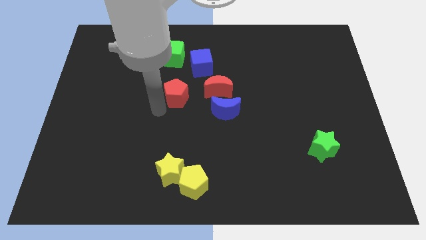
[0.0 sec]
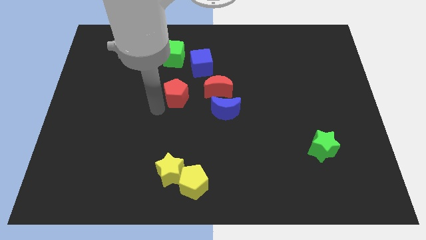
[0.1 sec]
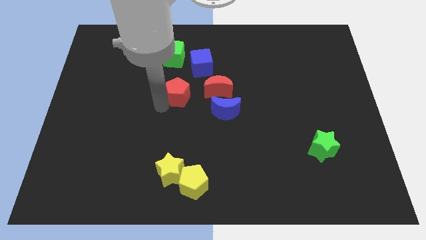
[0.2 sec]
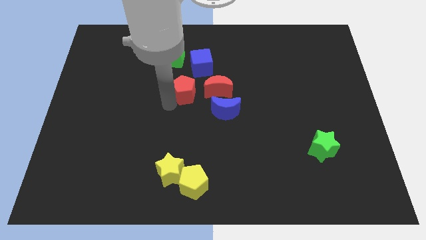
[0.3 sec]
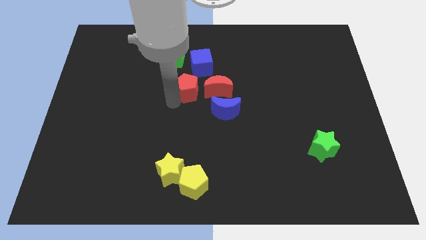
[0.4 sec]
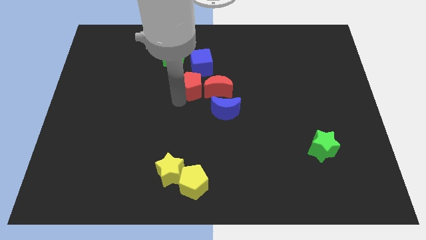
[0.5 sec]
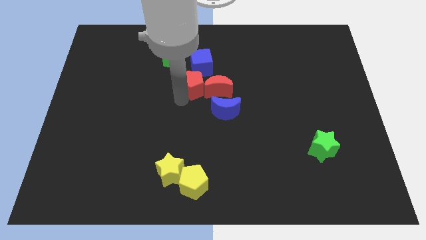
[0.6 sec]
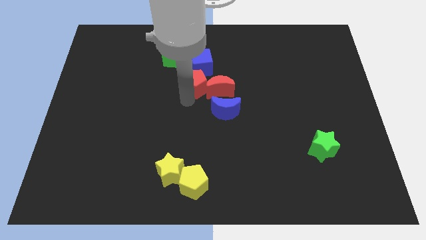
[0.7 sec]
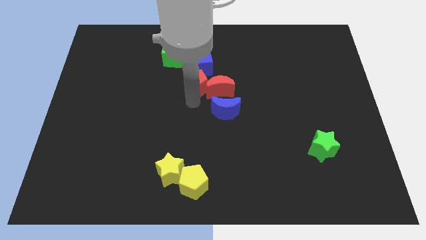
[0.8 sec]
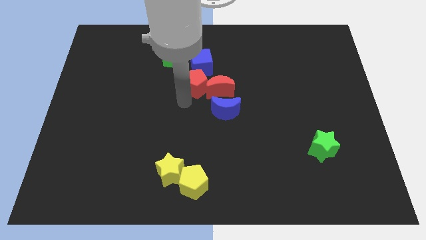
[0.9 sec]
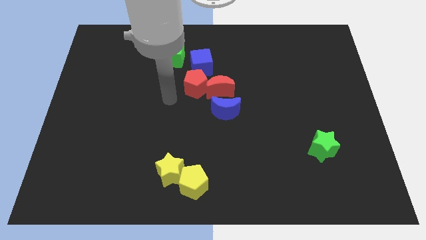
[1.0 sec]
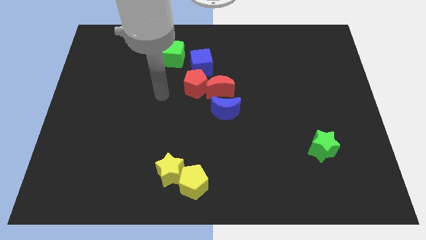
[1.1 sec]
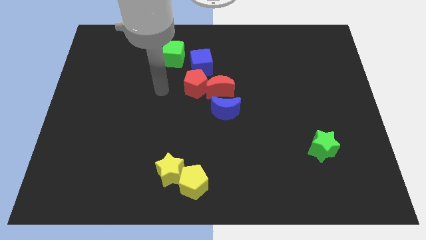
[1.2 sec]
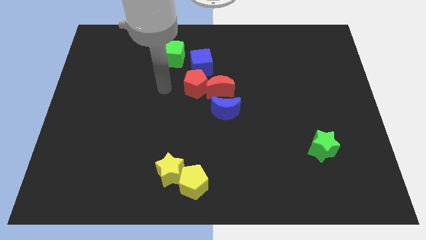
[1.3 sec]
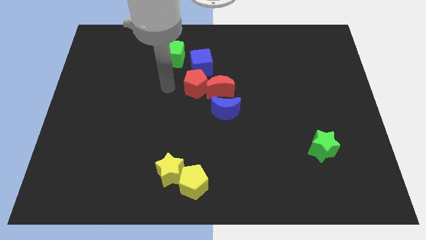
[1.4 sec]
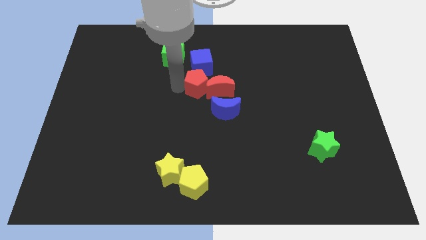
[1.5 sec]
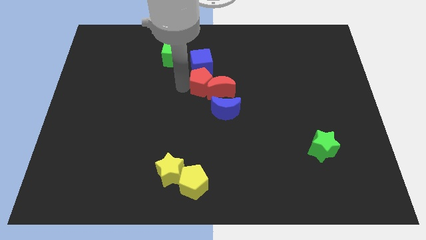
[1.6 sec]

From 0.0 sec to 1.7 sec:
place the red pentagon to the left of the red crescent

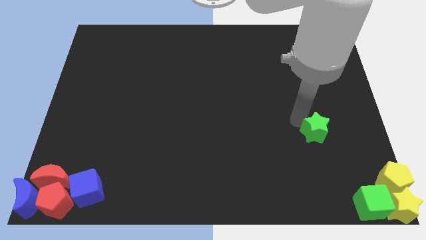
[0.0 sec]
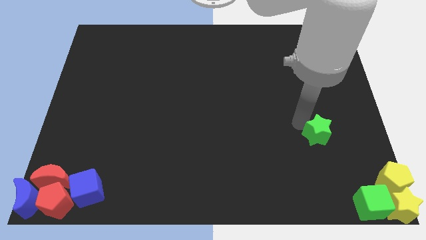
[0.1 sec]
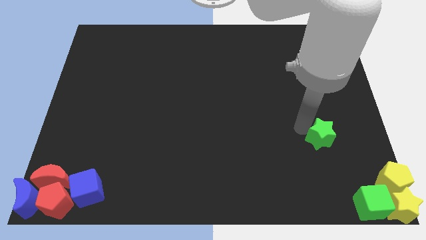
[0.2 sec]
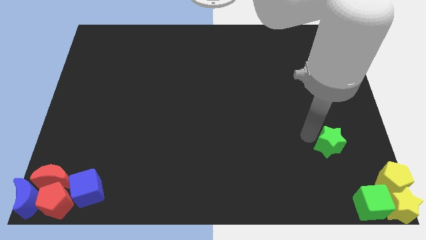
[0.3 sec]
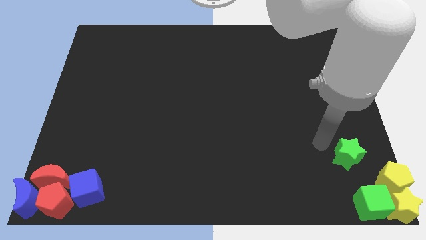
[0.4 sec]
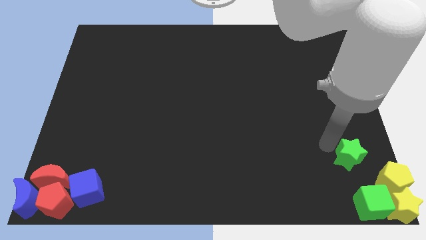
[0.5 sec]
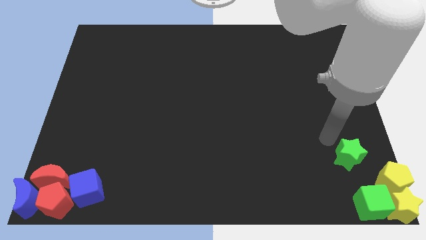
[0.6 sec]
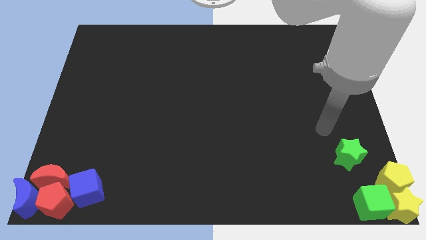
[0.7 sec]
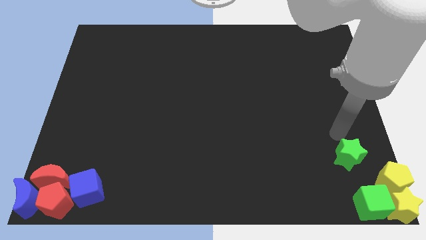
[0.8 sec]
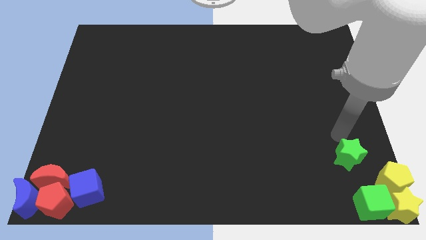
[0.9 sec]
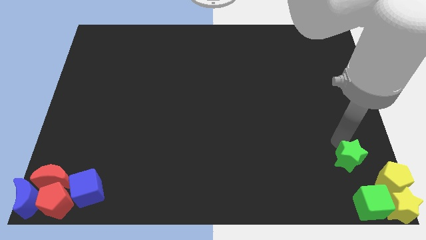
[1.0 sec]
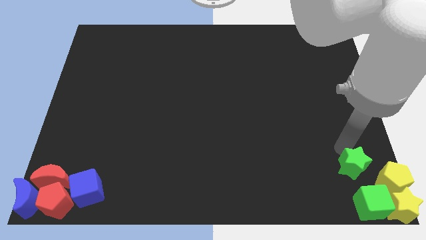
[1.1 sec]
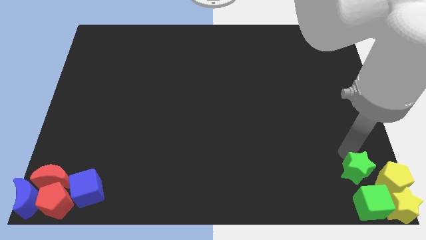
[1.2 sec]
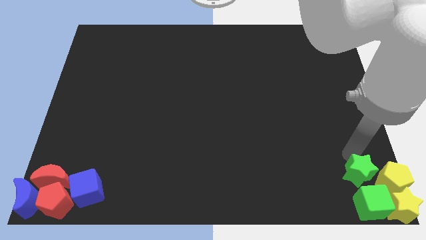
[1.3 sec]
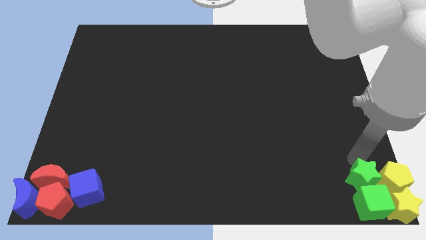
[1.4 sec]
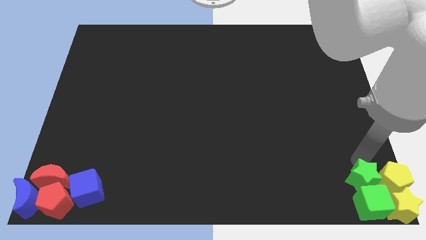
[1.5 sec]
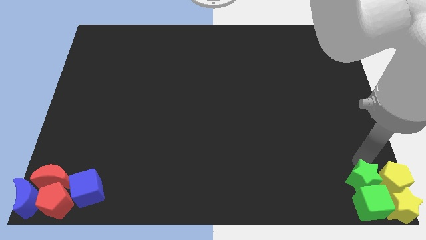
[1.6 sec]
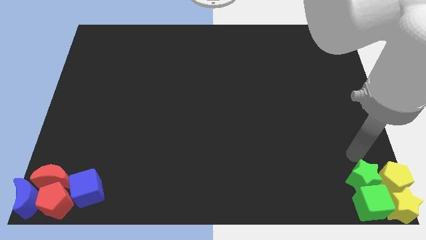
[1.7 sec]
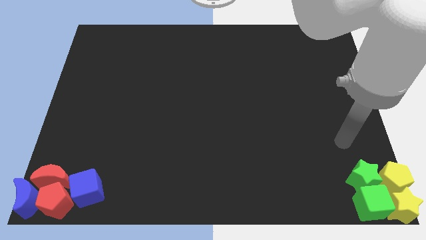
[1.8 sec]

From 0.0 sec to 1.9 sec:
push the green star left to the yellow pentagon

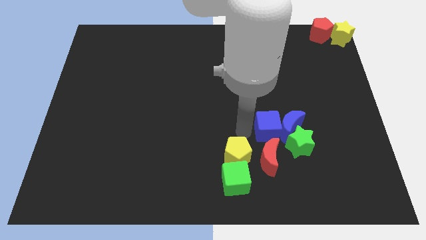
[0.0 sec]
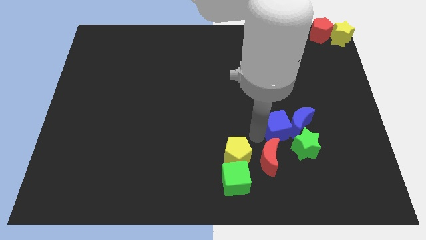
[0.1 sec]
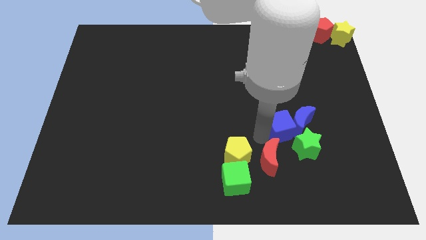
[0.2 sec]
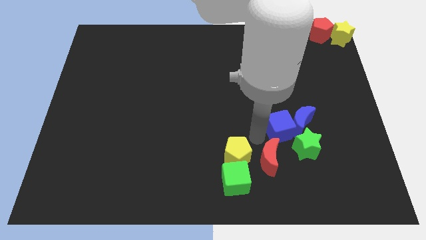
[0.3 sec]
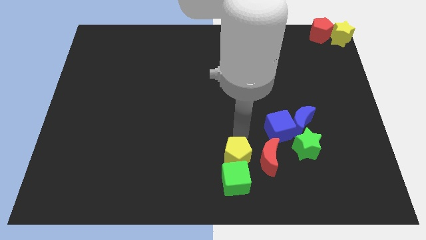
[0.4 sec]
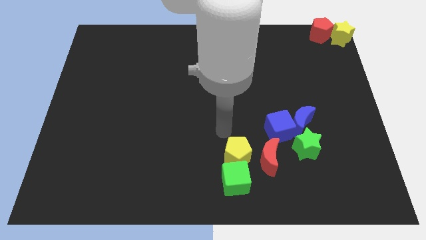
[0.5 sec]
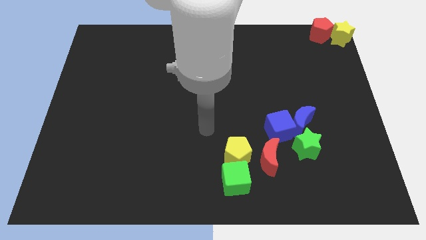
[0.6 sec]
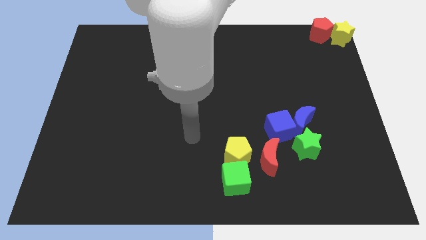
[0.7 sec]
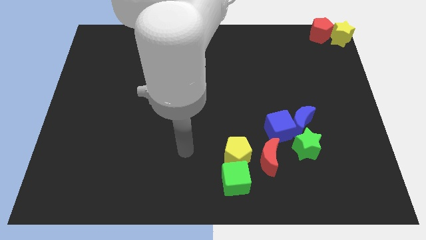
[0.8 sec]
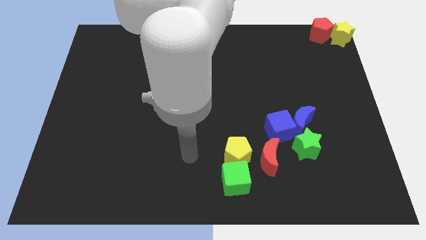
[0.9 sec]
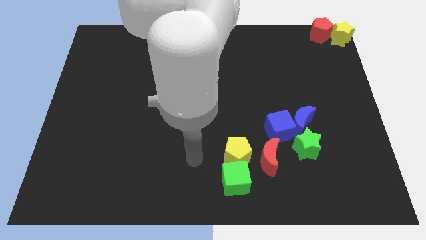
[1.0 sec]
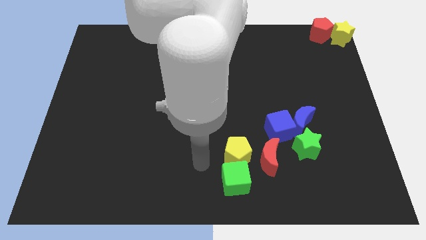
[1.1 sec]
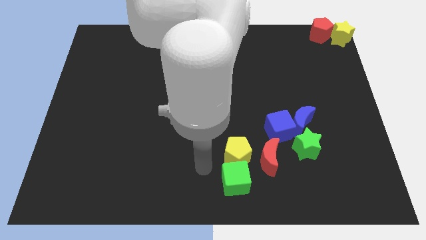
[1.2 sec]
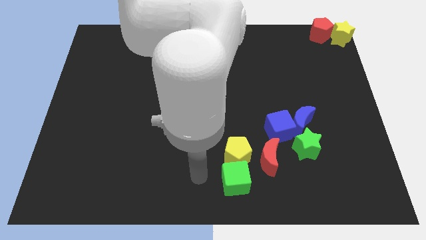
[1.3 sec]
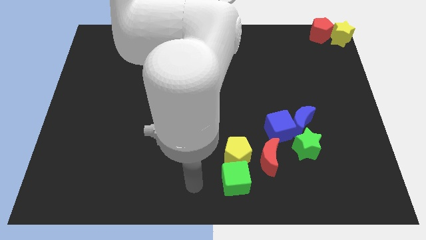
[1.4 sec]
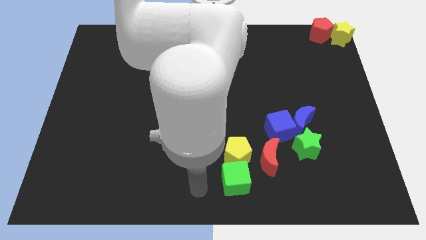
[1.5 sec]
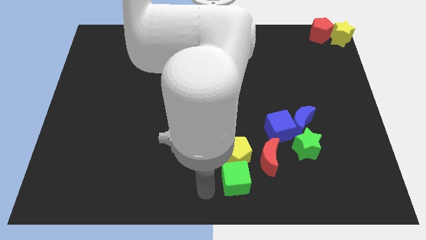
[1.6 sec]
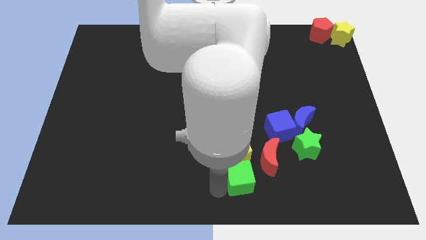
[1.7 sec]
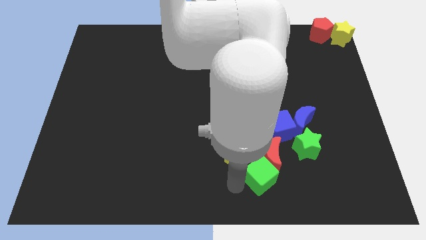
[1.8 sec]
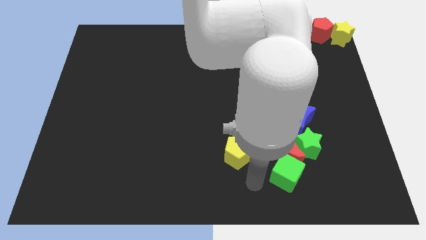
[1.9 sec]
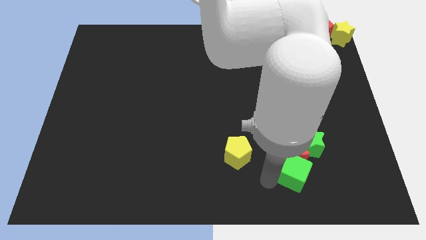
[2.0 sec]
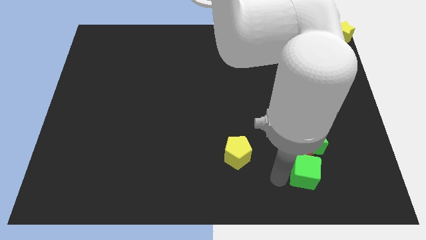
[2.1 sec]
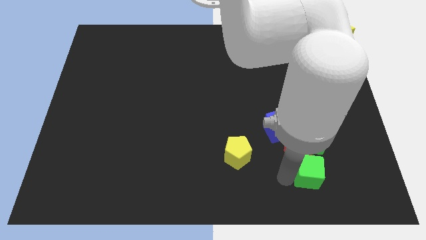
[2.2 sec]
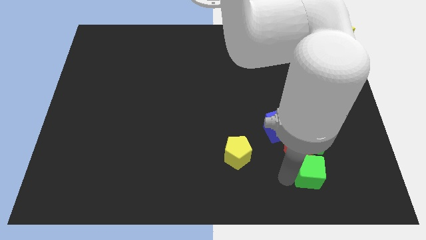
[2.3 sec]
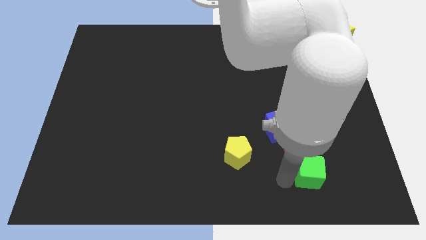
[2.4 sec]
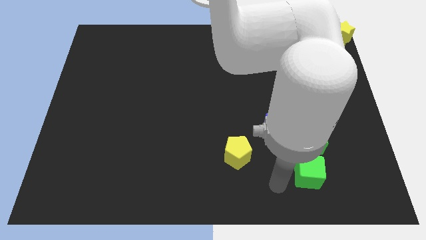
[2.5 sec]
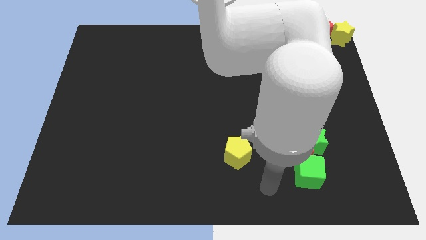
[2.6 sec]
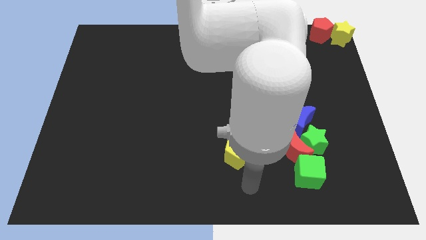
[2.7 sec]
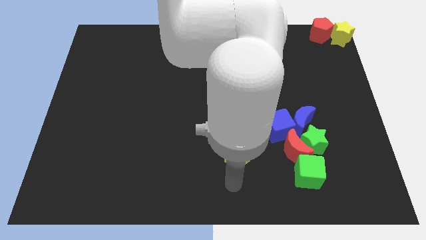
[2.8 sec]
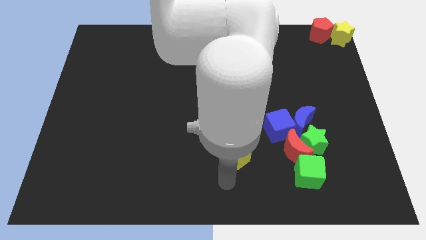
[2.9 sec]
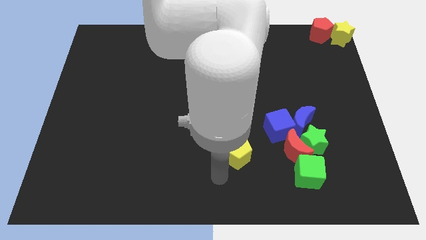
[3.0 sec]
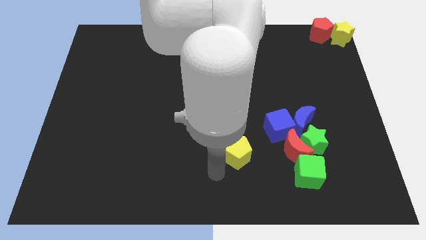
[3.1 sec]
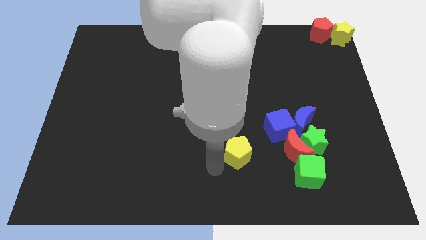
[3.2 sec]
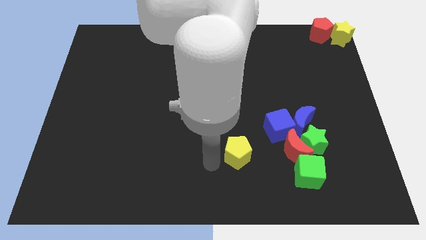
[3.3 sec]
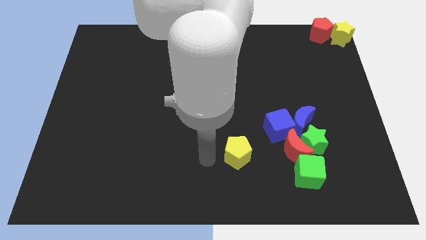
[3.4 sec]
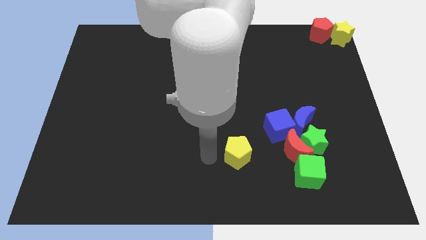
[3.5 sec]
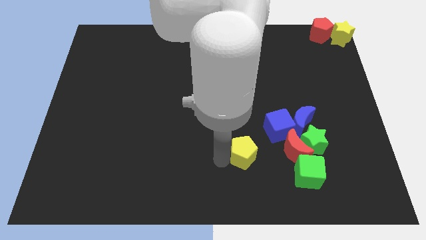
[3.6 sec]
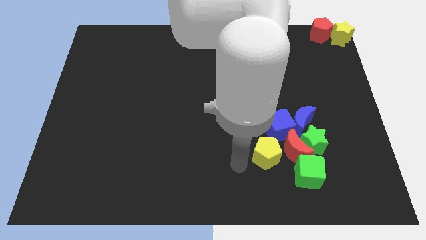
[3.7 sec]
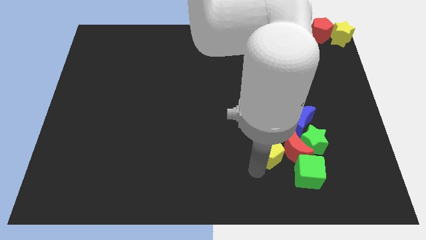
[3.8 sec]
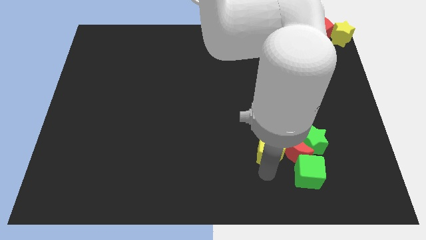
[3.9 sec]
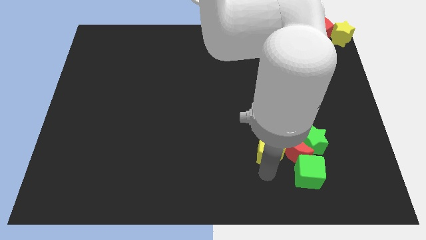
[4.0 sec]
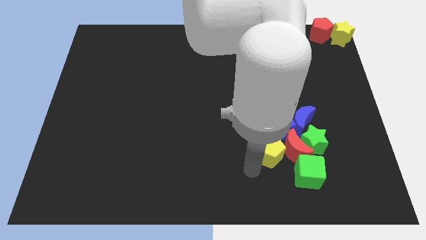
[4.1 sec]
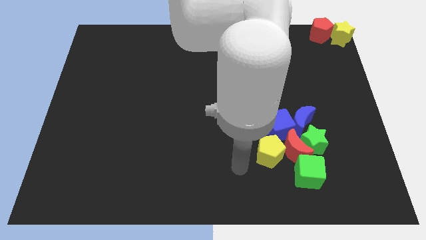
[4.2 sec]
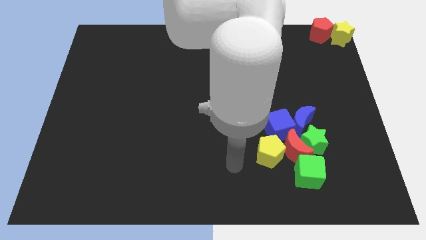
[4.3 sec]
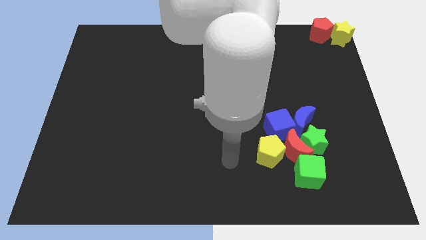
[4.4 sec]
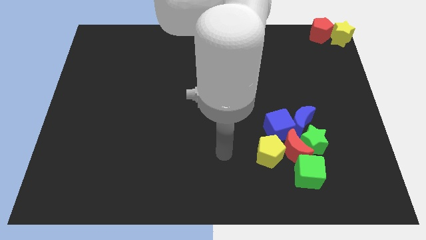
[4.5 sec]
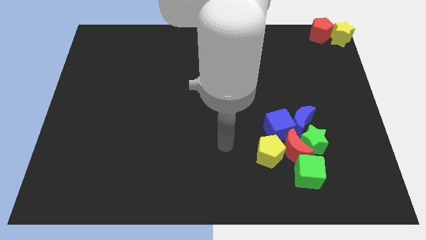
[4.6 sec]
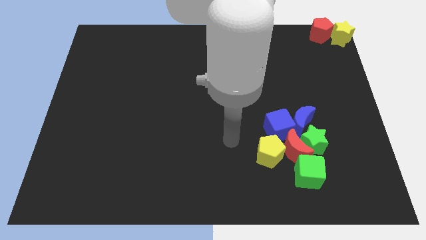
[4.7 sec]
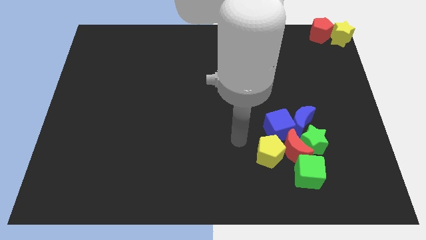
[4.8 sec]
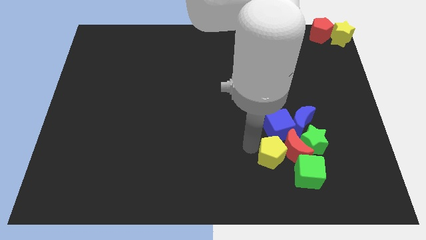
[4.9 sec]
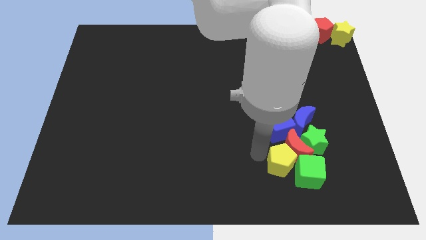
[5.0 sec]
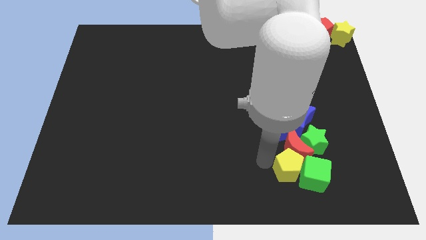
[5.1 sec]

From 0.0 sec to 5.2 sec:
push the group of objects towards the right center of the board

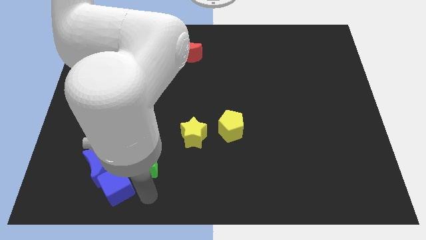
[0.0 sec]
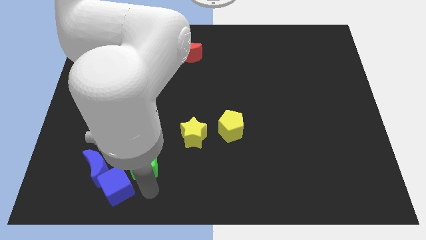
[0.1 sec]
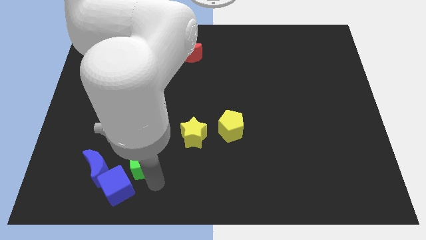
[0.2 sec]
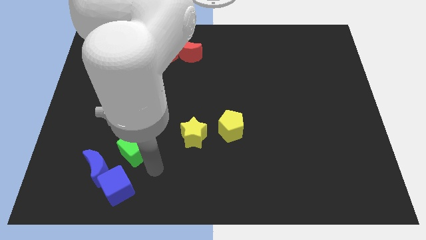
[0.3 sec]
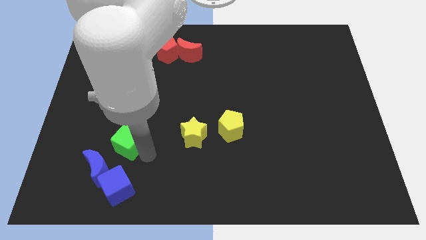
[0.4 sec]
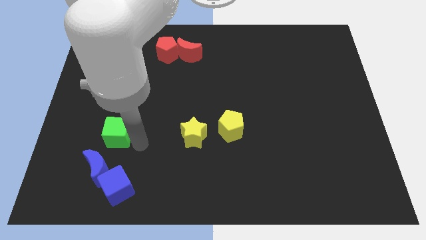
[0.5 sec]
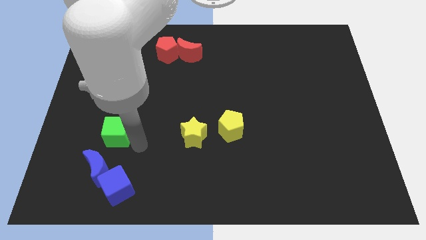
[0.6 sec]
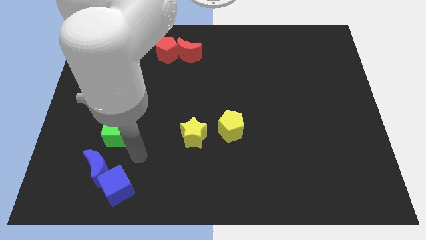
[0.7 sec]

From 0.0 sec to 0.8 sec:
place the green cube left to the yellow star
